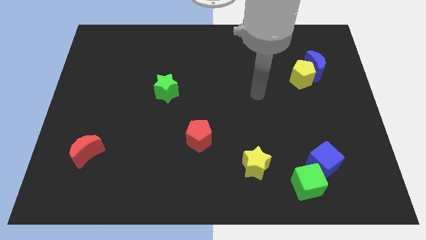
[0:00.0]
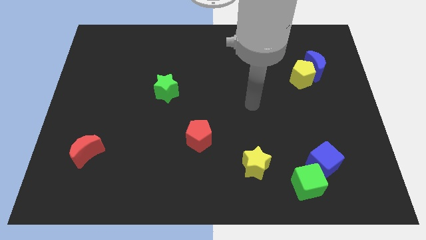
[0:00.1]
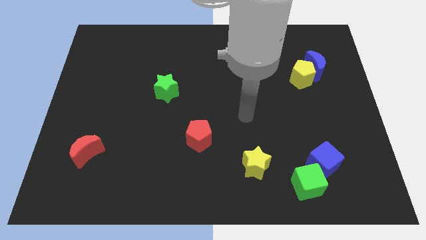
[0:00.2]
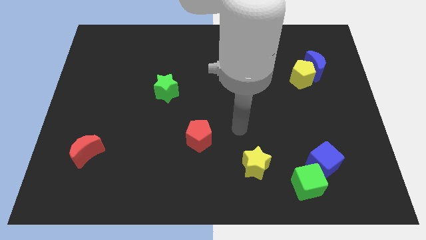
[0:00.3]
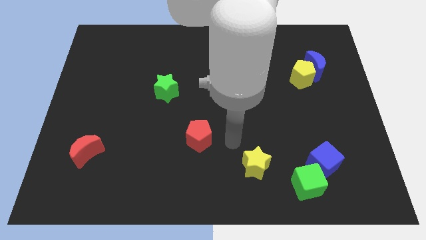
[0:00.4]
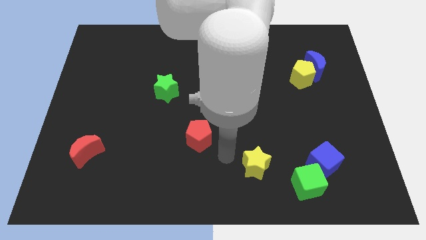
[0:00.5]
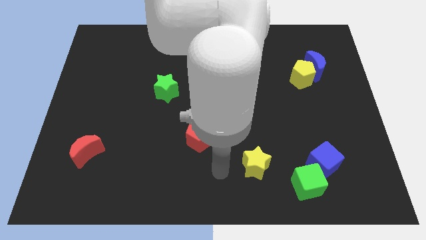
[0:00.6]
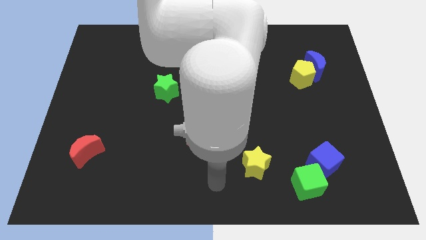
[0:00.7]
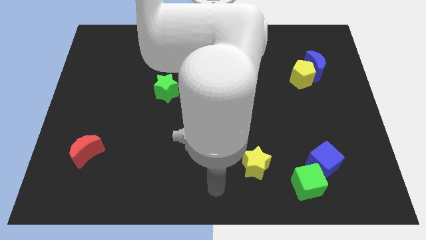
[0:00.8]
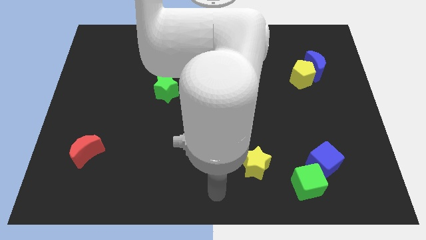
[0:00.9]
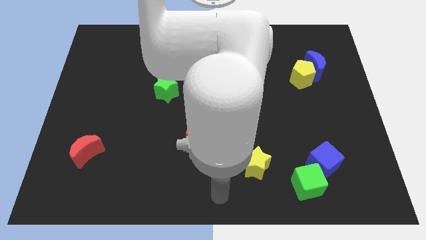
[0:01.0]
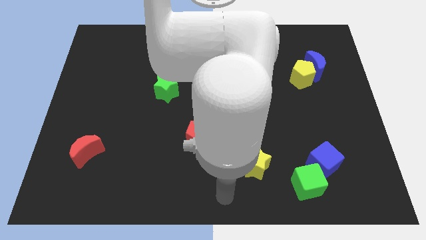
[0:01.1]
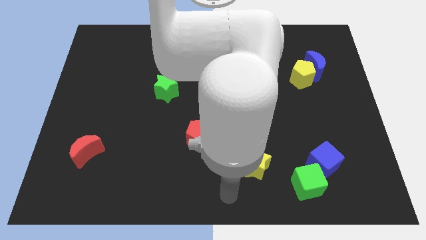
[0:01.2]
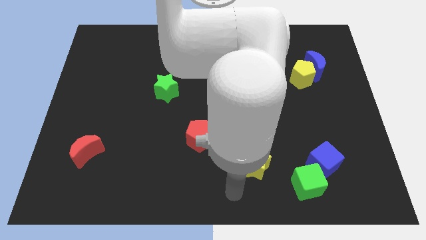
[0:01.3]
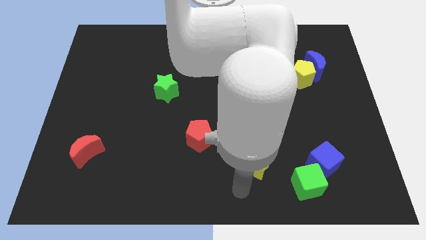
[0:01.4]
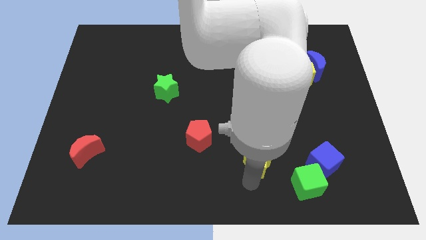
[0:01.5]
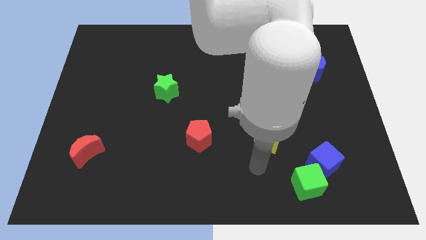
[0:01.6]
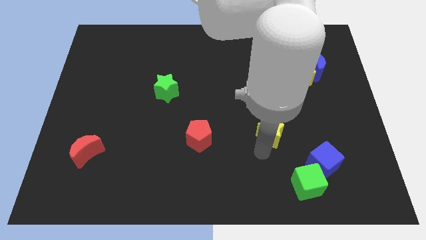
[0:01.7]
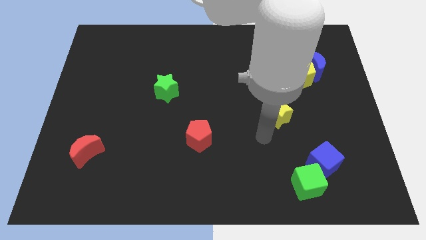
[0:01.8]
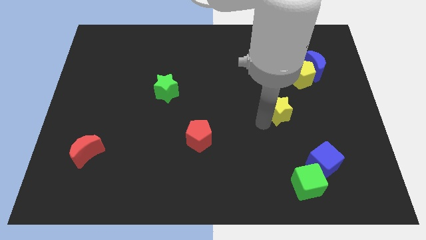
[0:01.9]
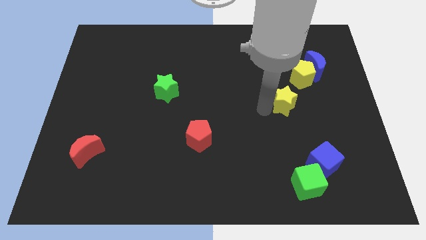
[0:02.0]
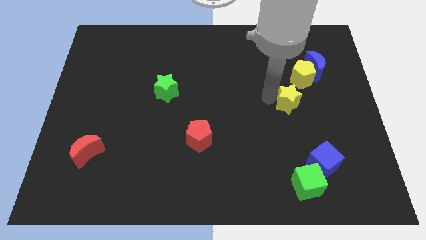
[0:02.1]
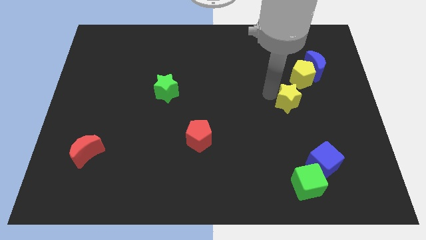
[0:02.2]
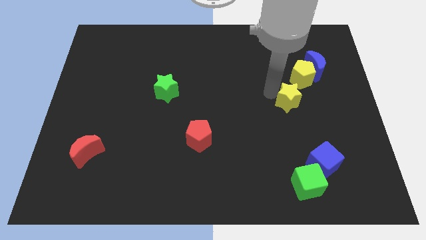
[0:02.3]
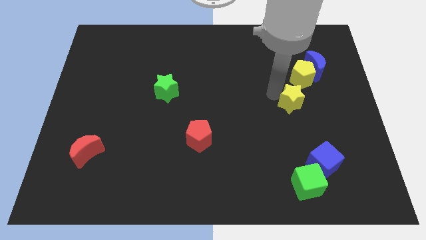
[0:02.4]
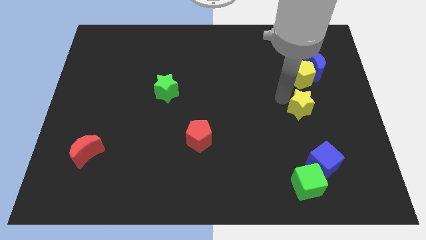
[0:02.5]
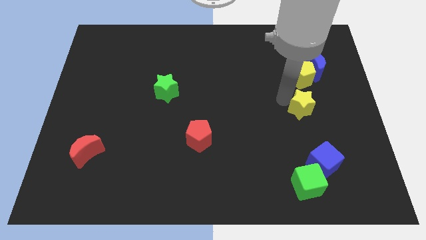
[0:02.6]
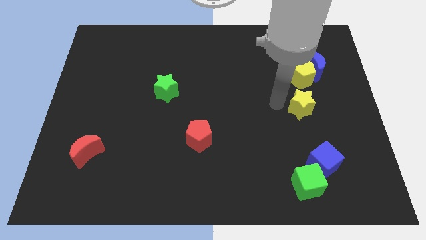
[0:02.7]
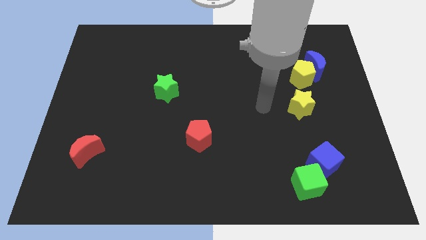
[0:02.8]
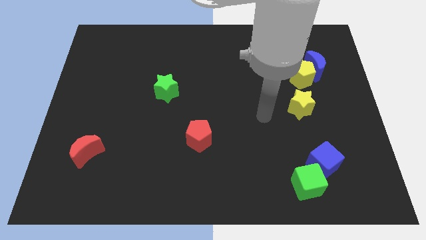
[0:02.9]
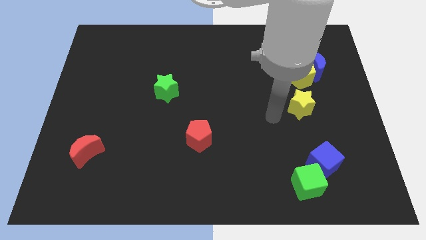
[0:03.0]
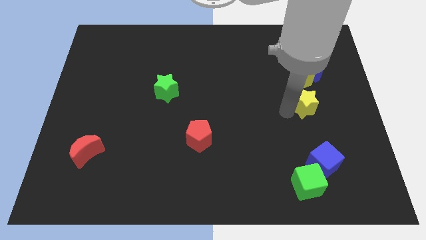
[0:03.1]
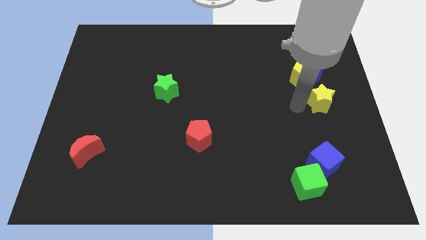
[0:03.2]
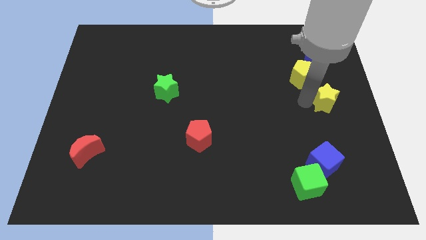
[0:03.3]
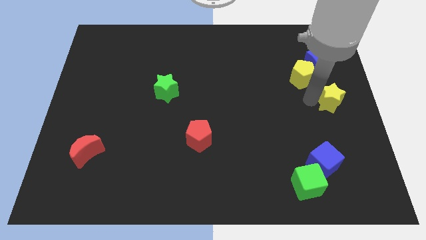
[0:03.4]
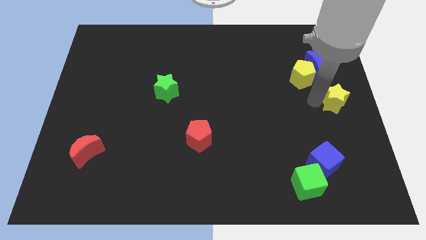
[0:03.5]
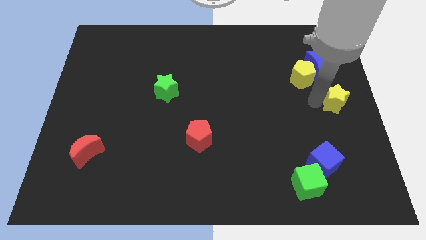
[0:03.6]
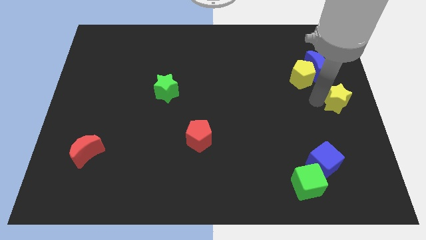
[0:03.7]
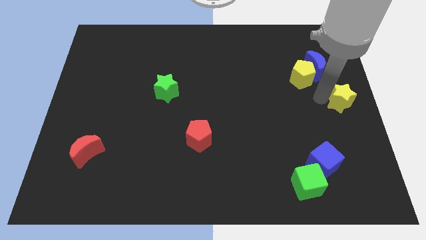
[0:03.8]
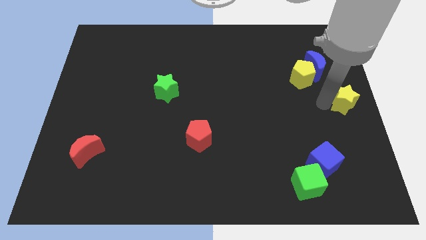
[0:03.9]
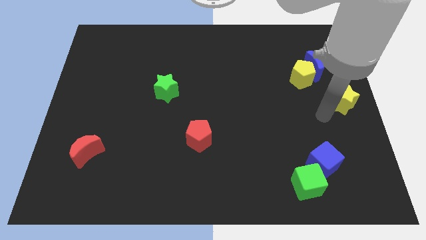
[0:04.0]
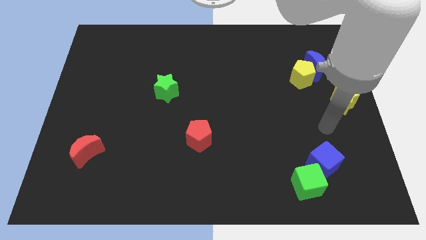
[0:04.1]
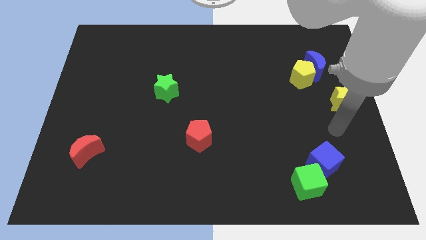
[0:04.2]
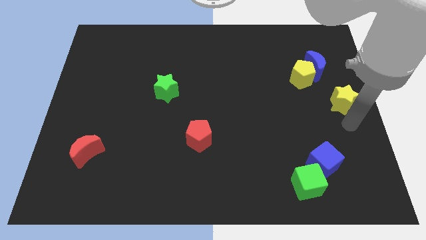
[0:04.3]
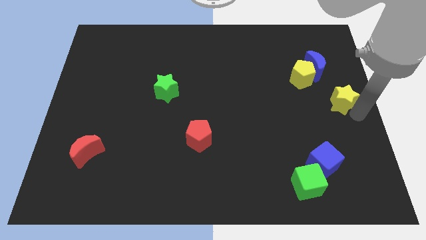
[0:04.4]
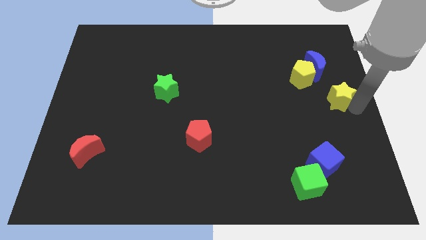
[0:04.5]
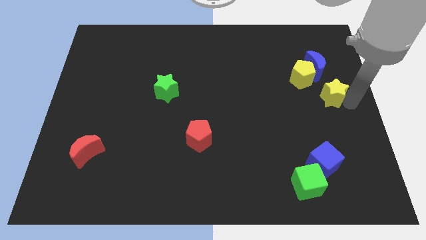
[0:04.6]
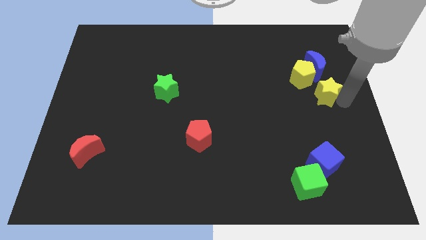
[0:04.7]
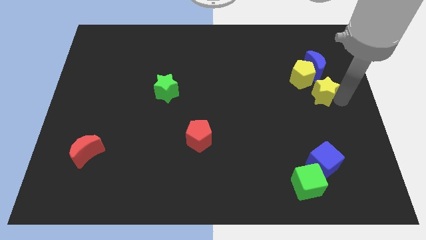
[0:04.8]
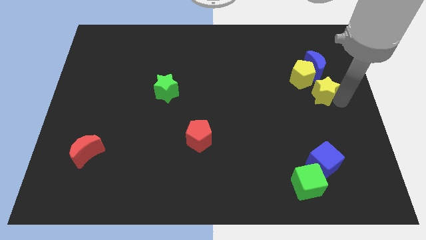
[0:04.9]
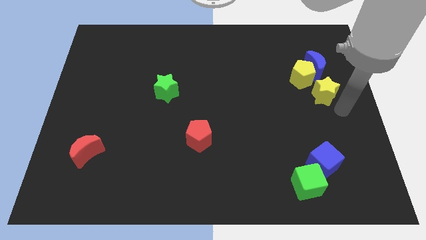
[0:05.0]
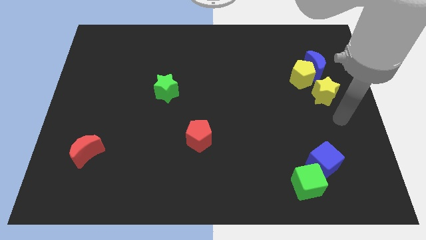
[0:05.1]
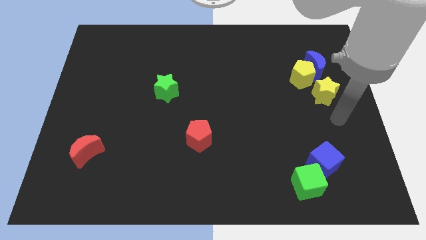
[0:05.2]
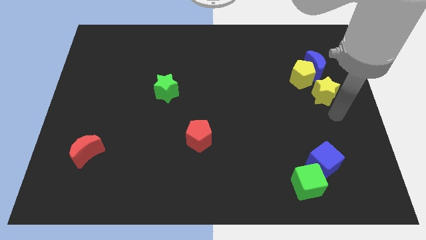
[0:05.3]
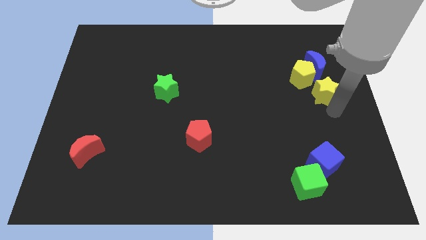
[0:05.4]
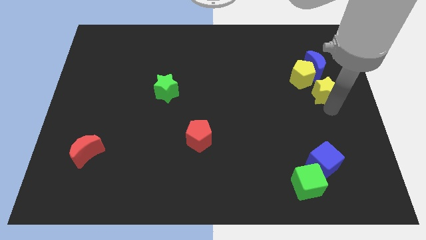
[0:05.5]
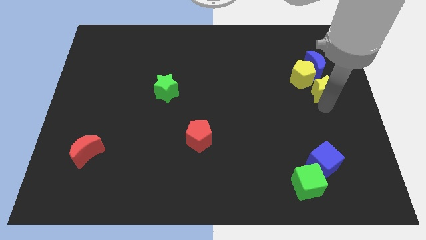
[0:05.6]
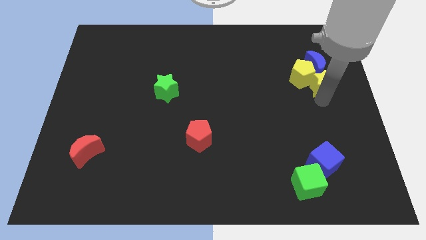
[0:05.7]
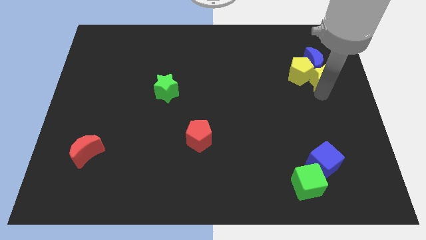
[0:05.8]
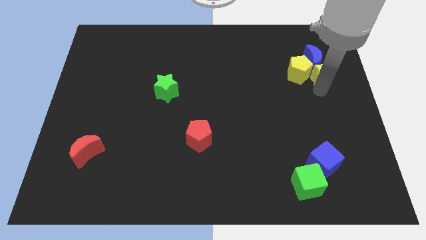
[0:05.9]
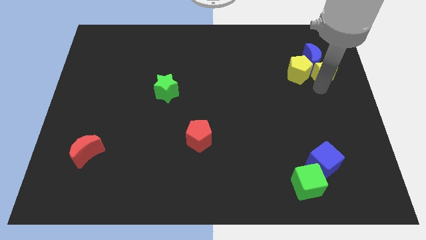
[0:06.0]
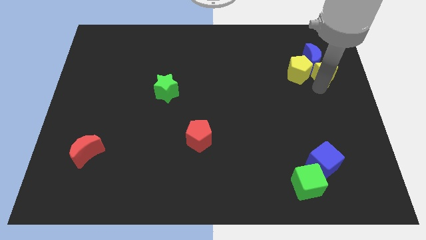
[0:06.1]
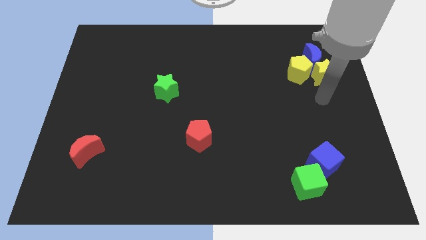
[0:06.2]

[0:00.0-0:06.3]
push the yellow star into the blue crescent

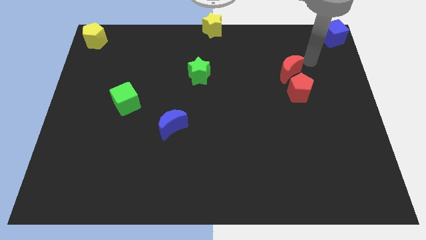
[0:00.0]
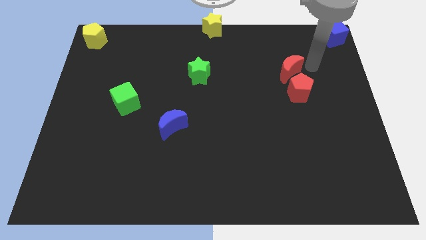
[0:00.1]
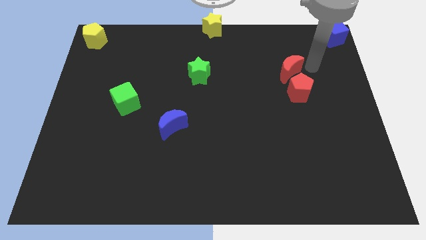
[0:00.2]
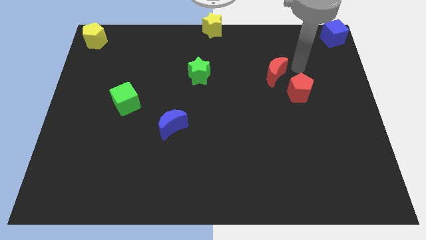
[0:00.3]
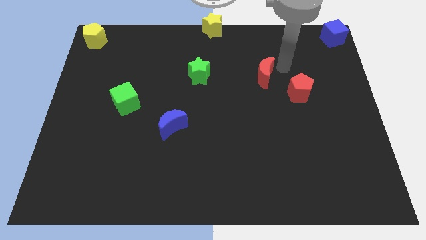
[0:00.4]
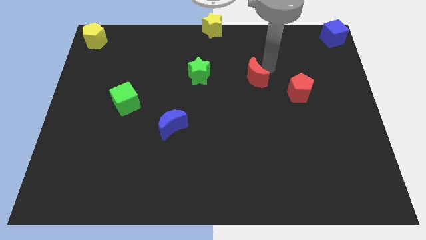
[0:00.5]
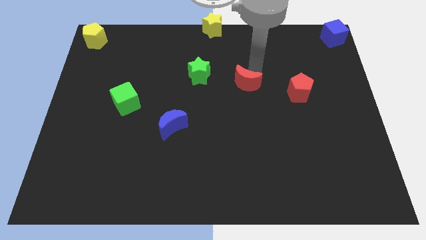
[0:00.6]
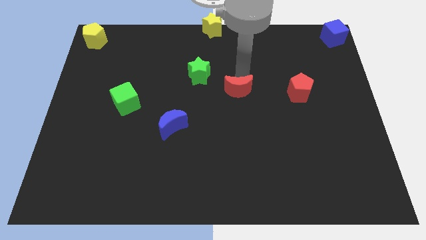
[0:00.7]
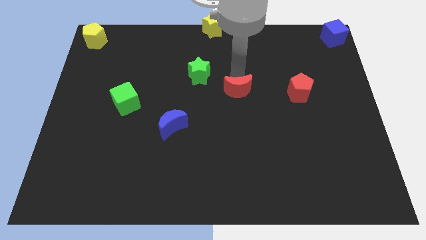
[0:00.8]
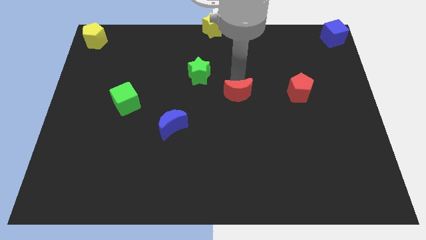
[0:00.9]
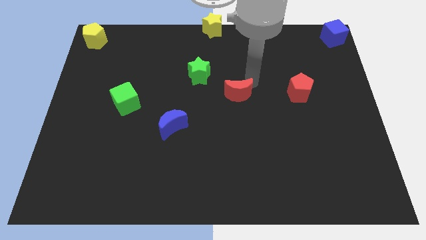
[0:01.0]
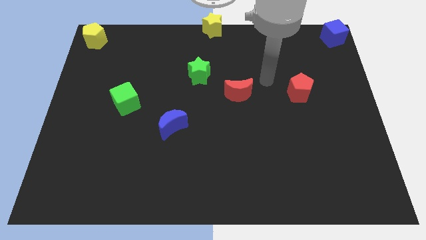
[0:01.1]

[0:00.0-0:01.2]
move the red crescent to left of red pentagon

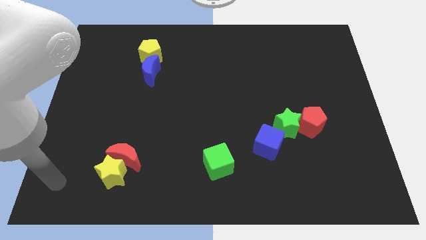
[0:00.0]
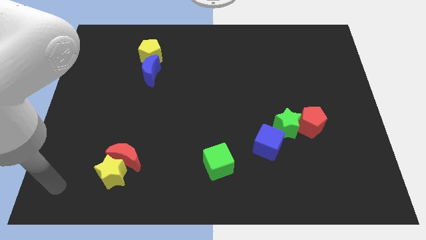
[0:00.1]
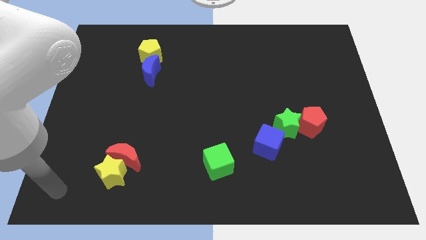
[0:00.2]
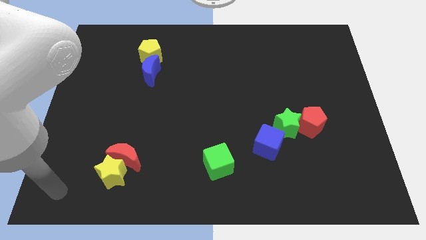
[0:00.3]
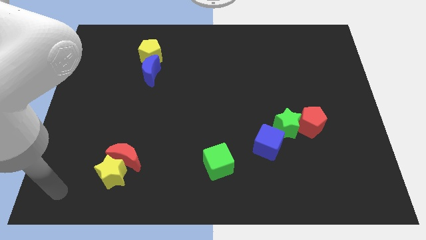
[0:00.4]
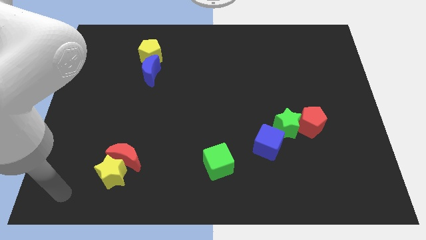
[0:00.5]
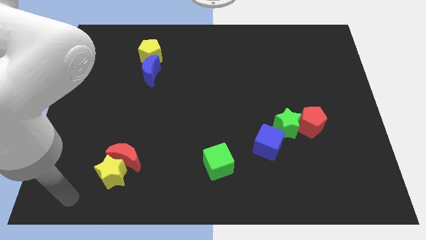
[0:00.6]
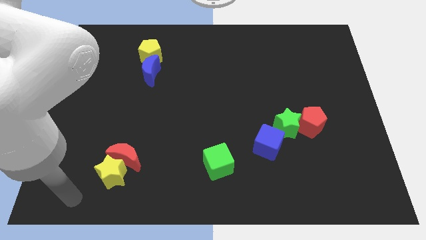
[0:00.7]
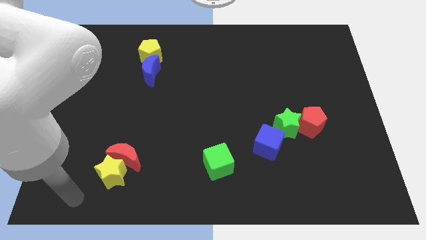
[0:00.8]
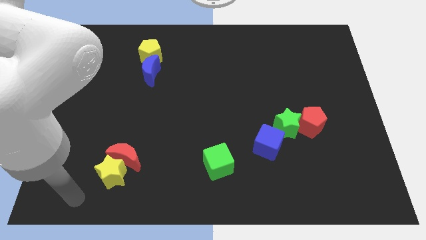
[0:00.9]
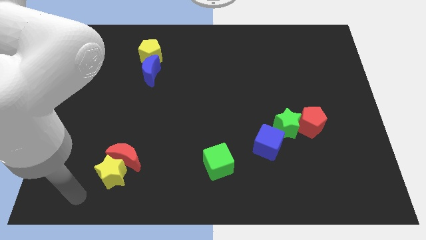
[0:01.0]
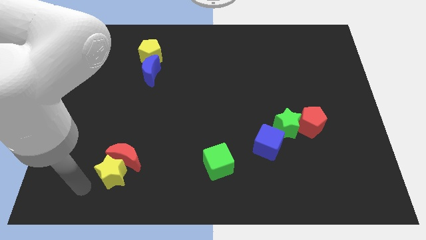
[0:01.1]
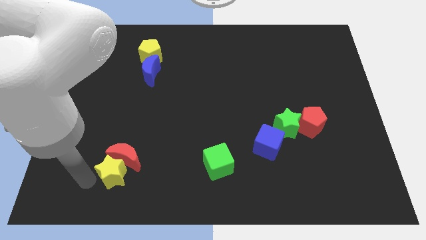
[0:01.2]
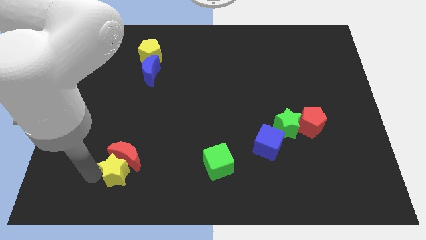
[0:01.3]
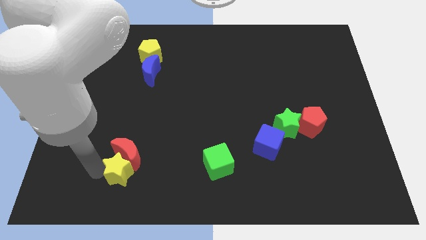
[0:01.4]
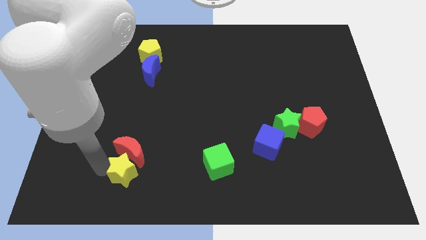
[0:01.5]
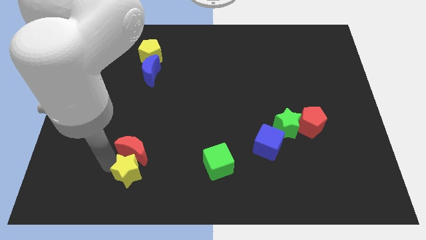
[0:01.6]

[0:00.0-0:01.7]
slide the yellow star slightly to the right
